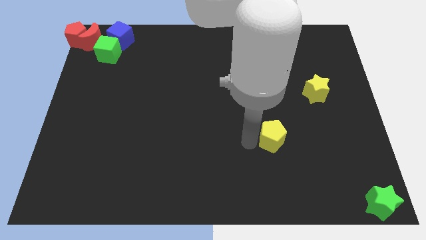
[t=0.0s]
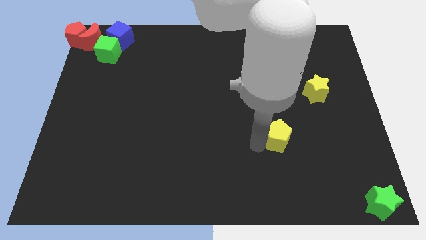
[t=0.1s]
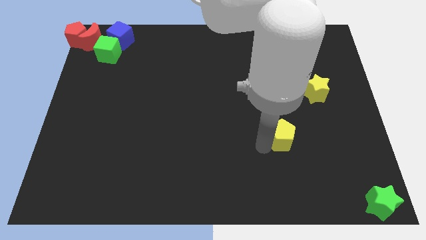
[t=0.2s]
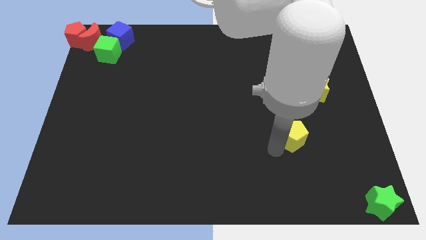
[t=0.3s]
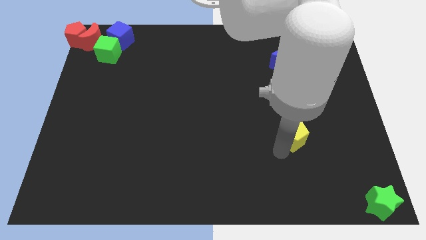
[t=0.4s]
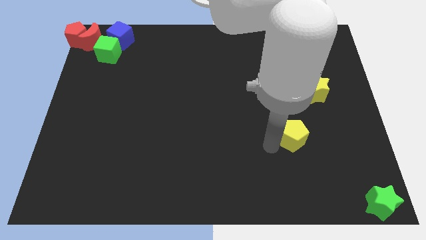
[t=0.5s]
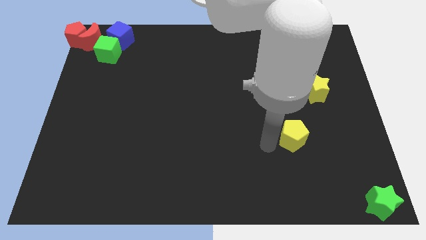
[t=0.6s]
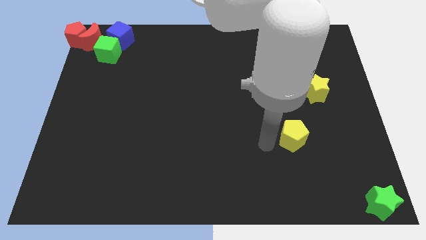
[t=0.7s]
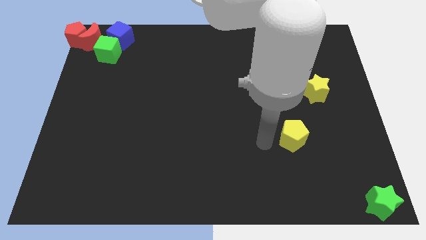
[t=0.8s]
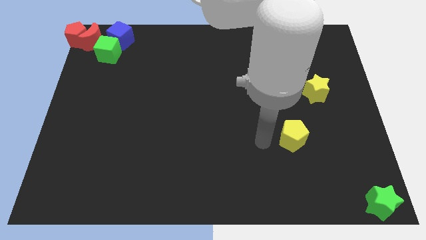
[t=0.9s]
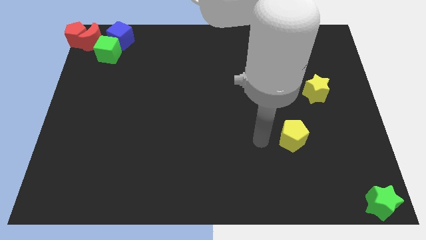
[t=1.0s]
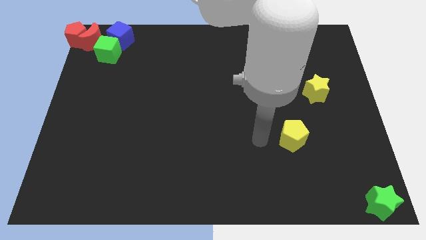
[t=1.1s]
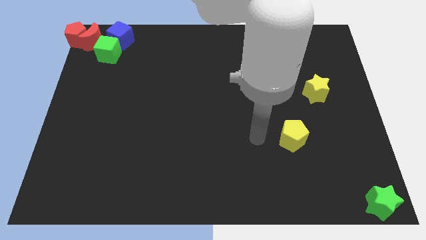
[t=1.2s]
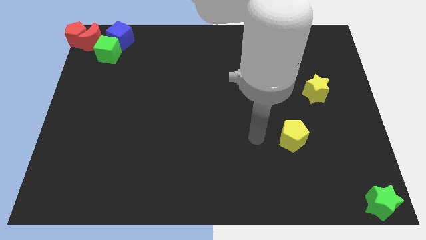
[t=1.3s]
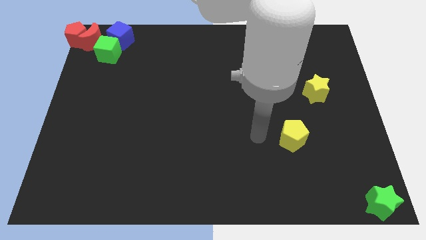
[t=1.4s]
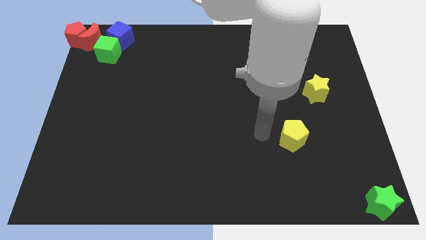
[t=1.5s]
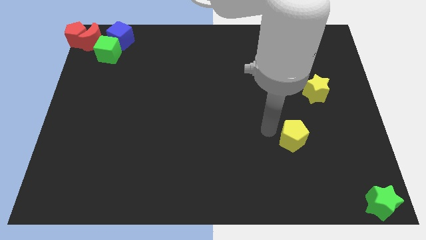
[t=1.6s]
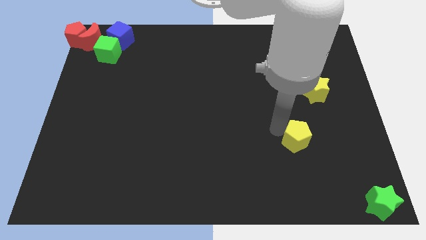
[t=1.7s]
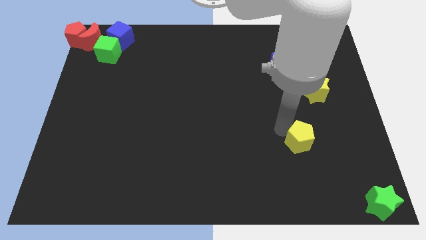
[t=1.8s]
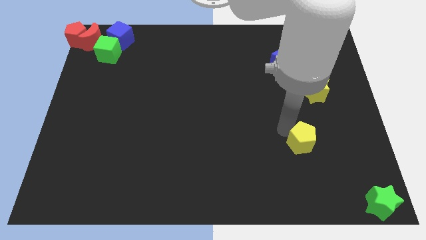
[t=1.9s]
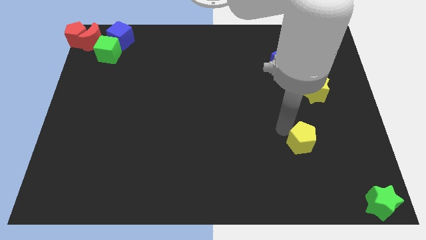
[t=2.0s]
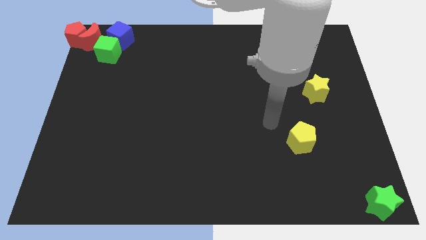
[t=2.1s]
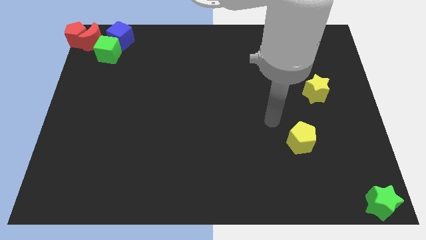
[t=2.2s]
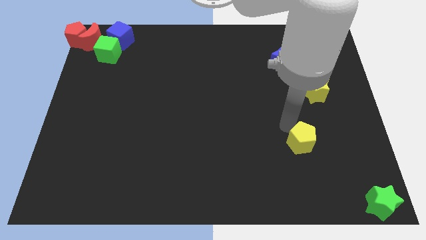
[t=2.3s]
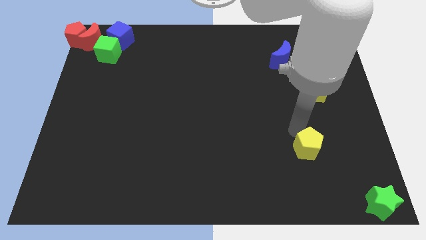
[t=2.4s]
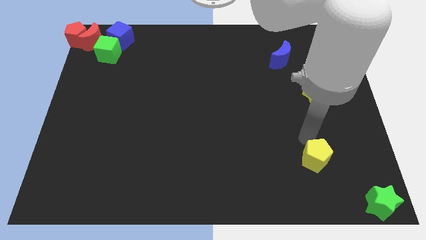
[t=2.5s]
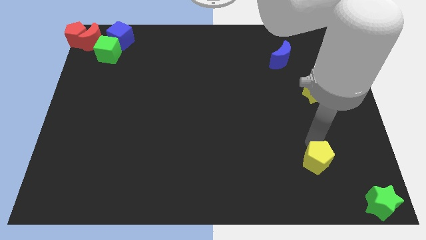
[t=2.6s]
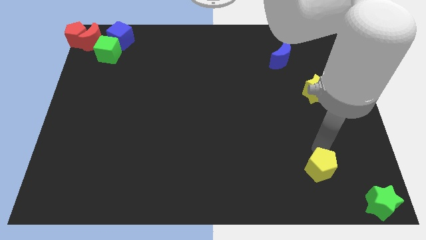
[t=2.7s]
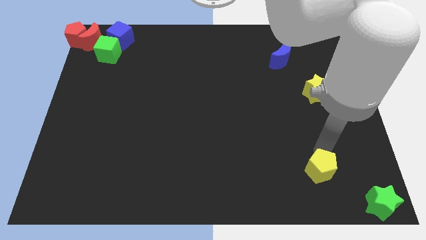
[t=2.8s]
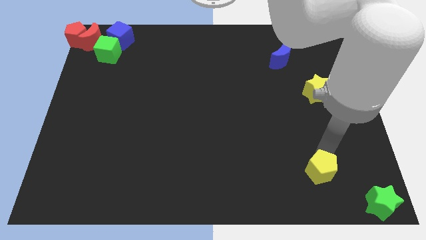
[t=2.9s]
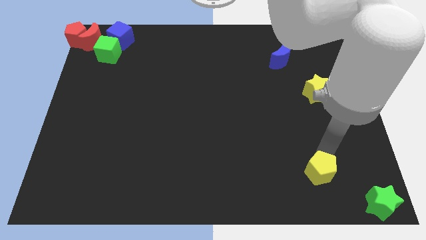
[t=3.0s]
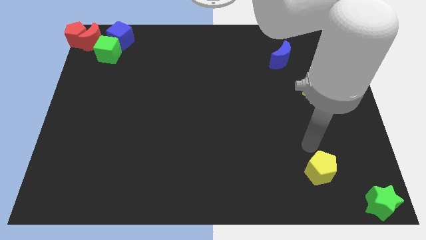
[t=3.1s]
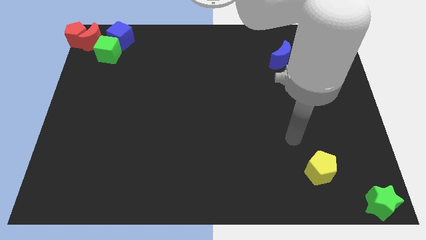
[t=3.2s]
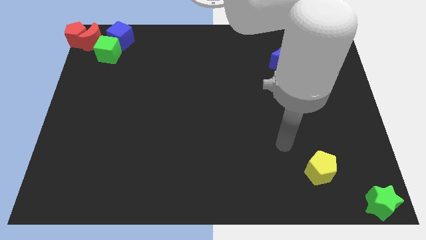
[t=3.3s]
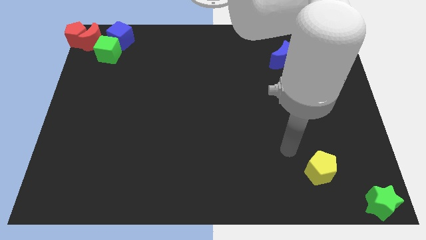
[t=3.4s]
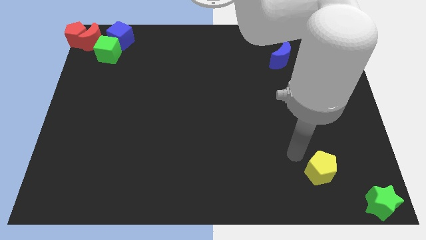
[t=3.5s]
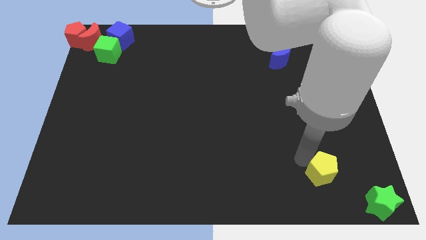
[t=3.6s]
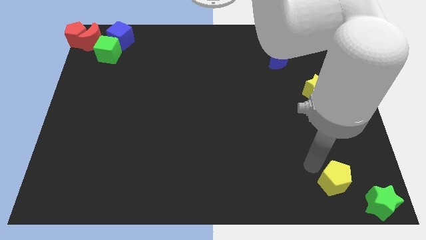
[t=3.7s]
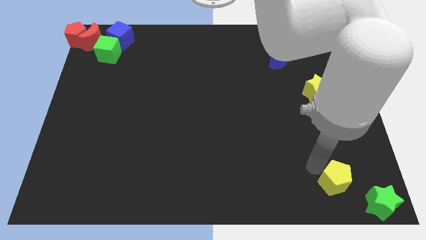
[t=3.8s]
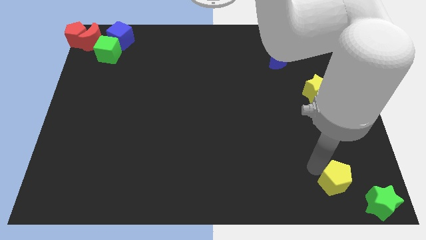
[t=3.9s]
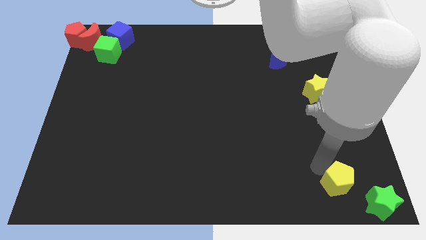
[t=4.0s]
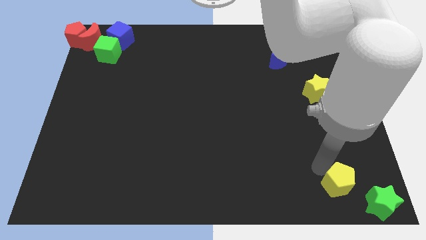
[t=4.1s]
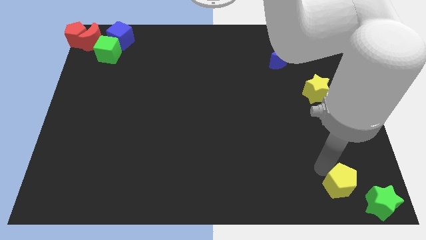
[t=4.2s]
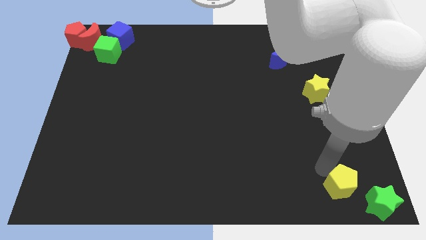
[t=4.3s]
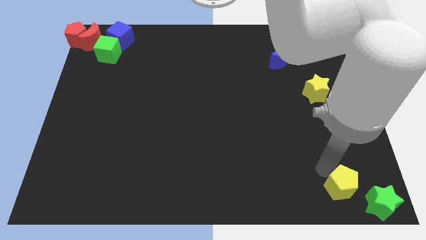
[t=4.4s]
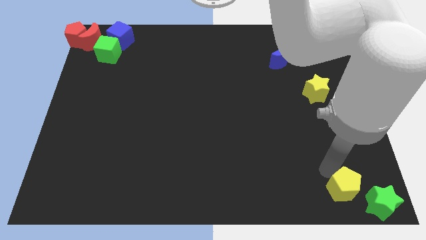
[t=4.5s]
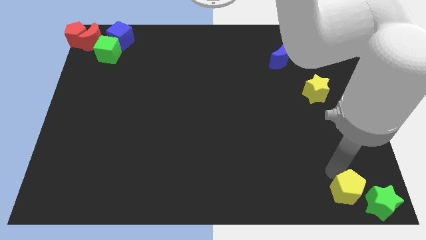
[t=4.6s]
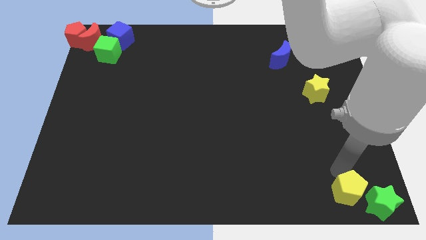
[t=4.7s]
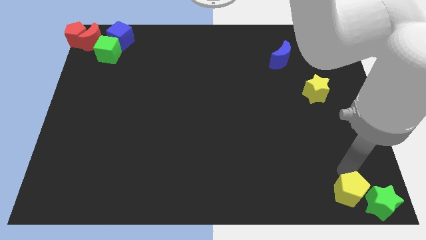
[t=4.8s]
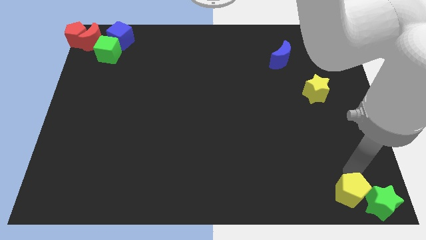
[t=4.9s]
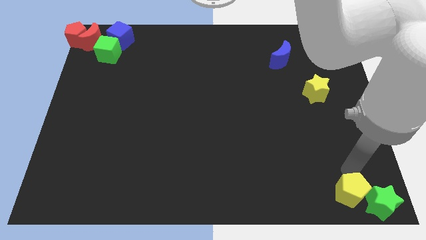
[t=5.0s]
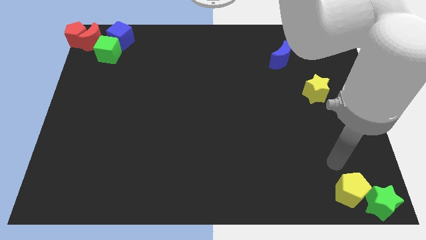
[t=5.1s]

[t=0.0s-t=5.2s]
place the yellow pentagon to the left of the green star

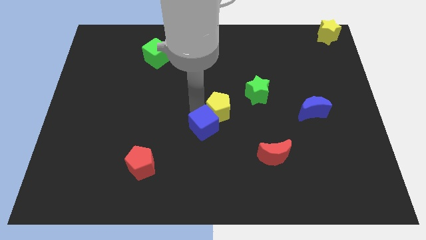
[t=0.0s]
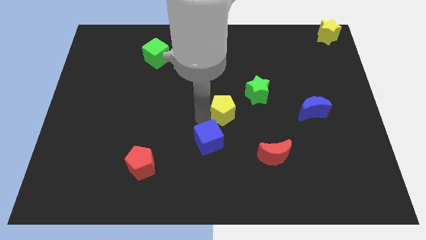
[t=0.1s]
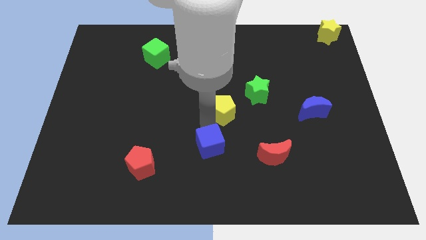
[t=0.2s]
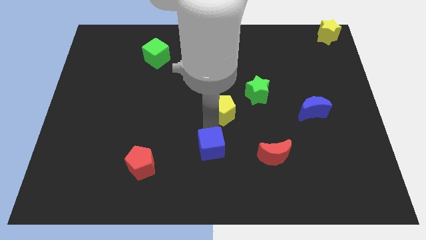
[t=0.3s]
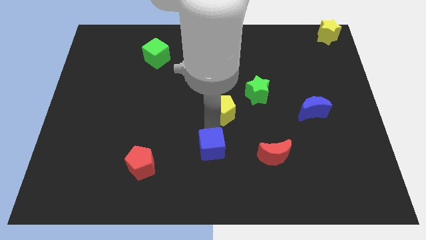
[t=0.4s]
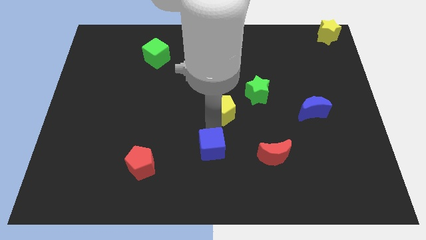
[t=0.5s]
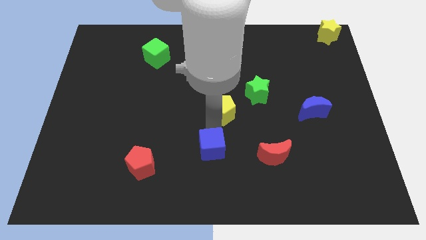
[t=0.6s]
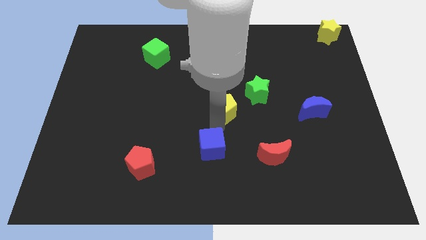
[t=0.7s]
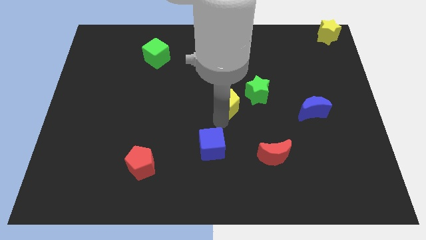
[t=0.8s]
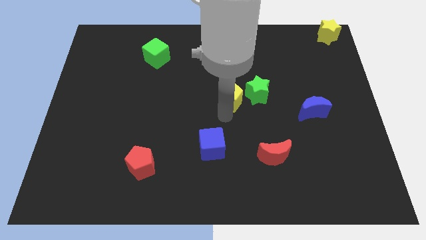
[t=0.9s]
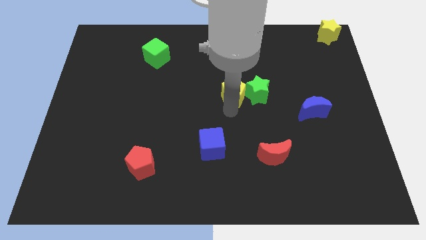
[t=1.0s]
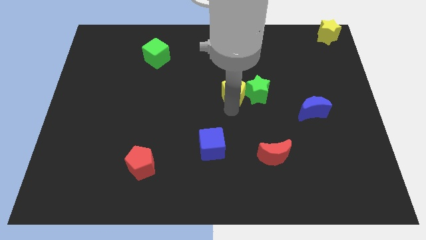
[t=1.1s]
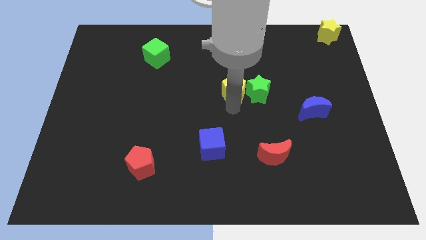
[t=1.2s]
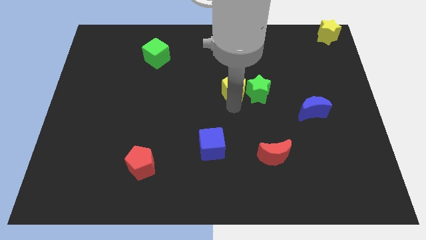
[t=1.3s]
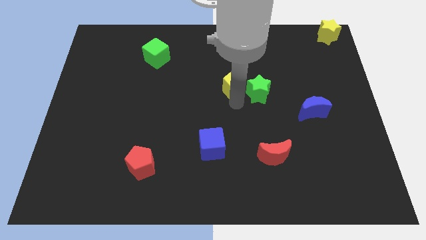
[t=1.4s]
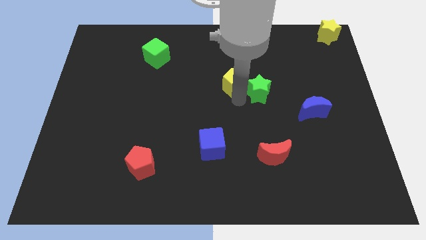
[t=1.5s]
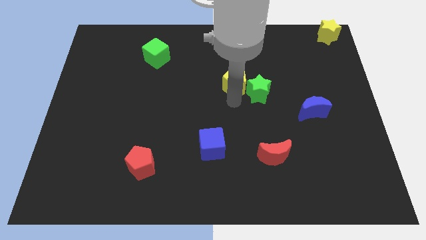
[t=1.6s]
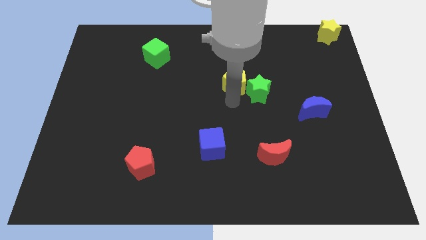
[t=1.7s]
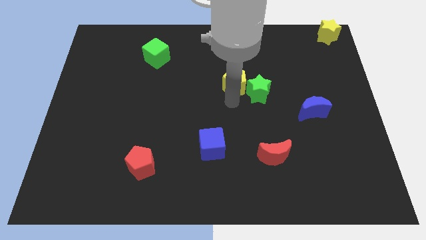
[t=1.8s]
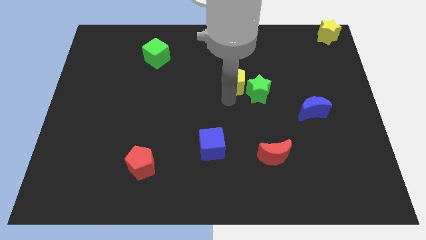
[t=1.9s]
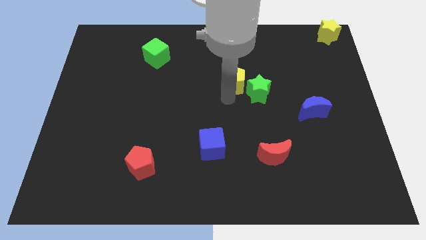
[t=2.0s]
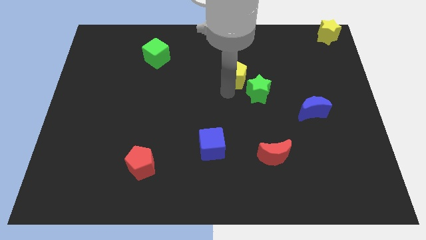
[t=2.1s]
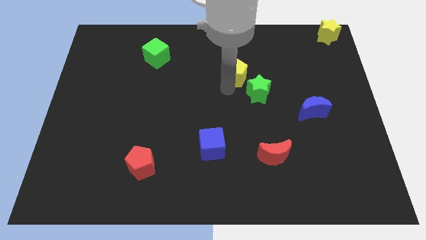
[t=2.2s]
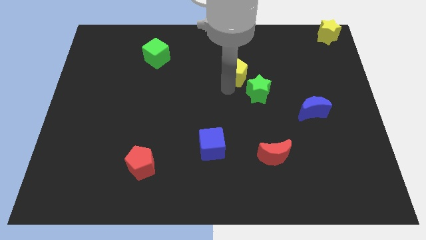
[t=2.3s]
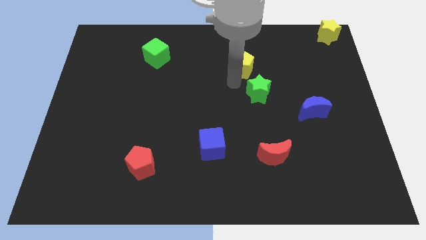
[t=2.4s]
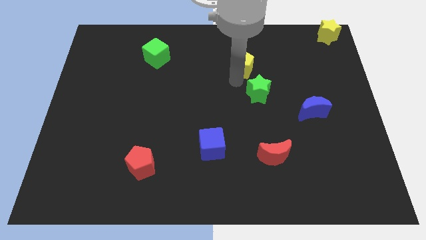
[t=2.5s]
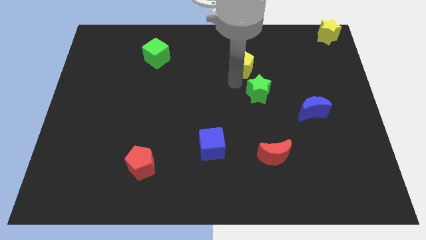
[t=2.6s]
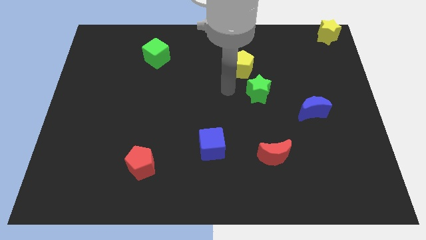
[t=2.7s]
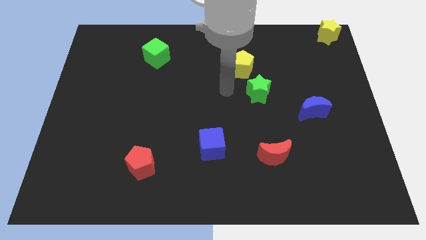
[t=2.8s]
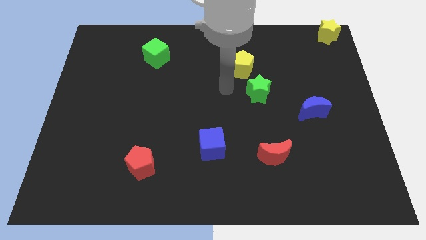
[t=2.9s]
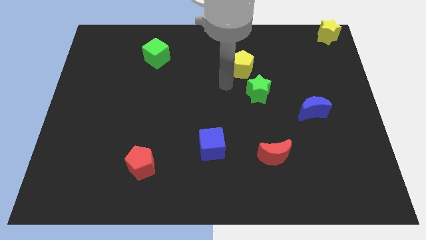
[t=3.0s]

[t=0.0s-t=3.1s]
place the yellow pentagon diagonally to yellow star

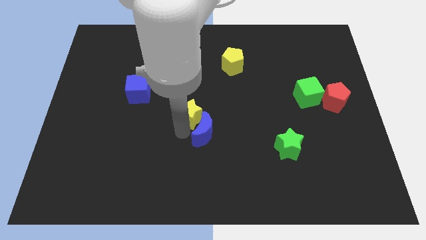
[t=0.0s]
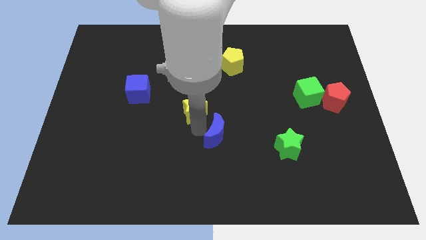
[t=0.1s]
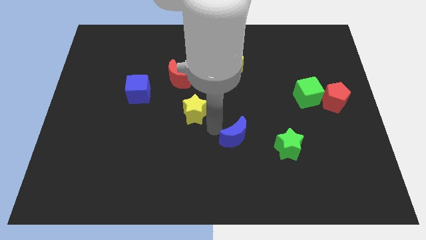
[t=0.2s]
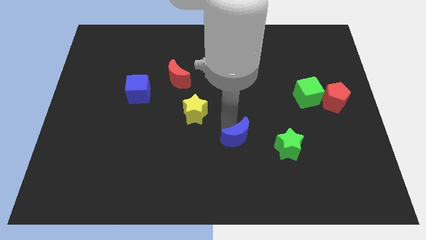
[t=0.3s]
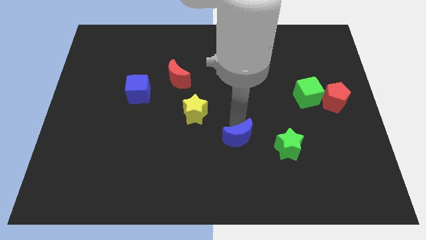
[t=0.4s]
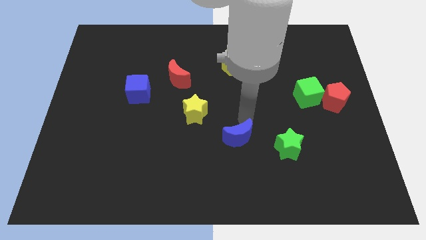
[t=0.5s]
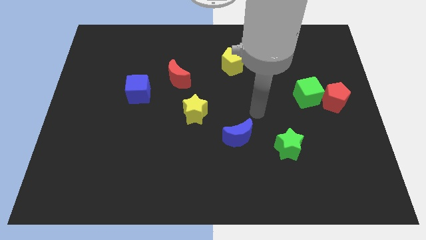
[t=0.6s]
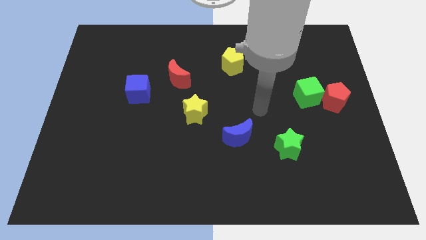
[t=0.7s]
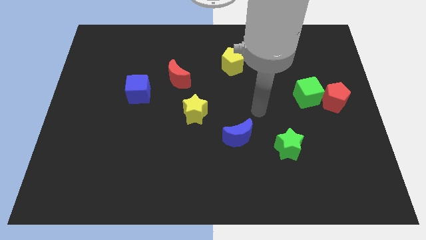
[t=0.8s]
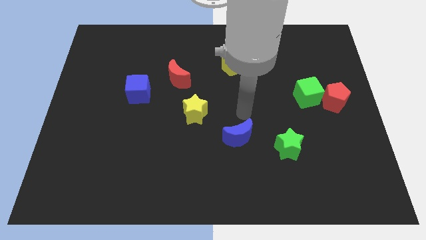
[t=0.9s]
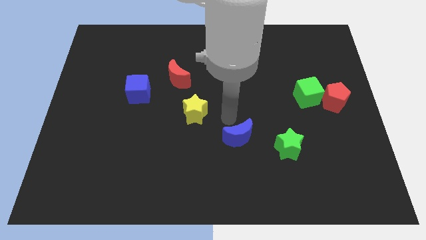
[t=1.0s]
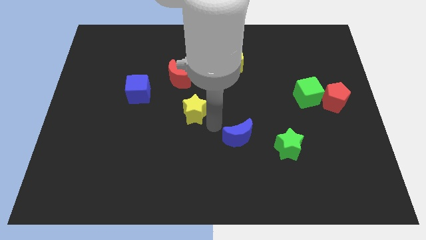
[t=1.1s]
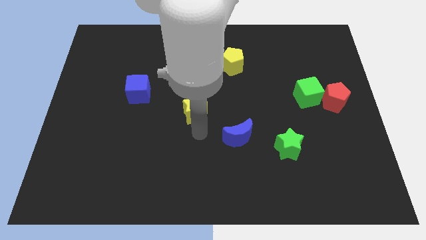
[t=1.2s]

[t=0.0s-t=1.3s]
separate blue crescent from yellow star
